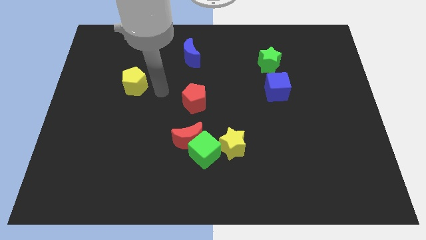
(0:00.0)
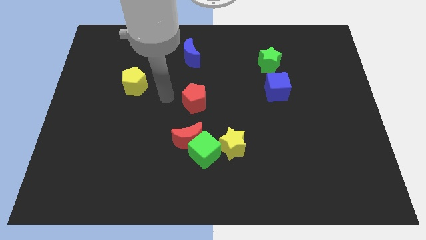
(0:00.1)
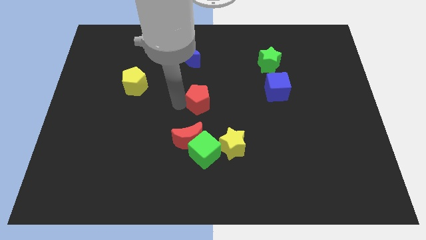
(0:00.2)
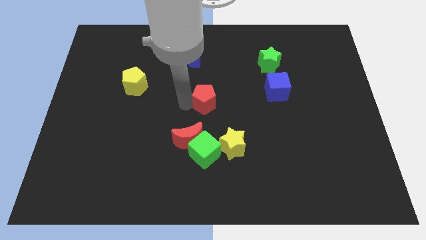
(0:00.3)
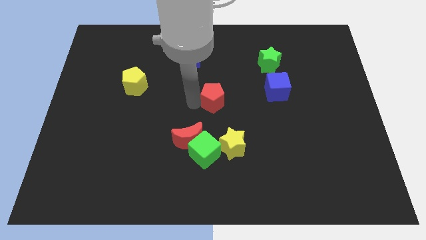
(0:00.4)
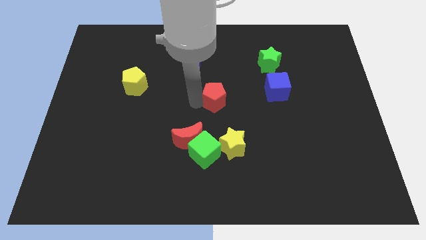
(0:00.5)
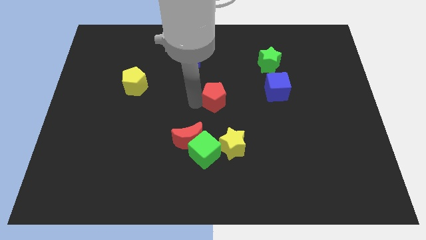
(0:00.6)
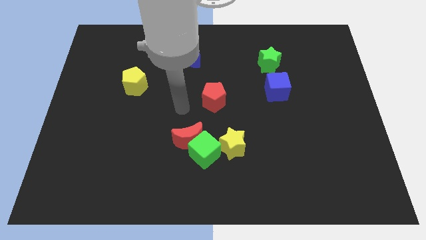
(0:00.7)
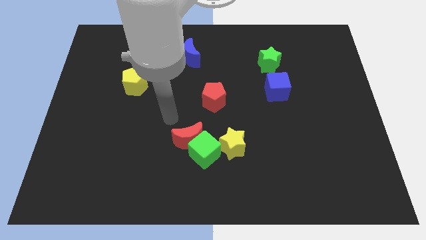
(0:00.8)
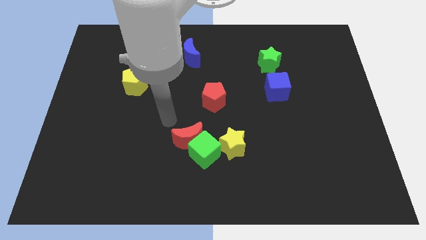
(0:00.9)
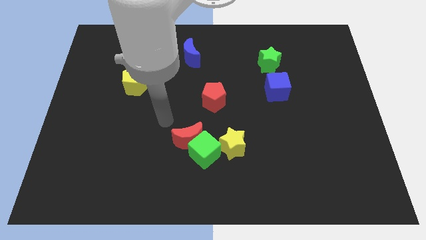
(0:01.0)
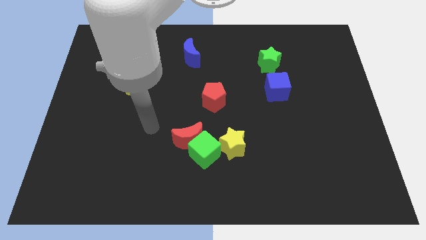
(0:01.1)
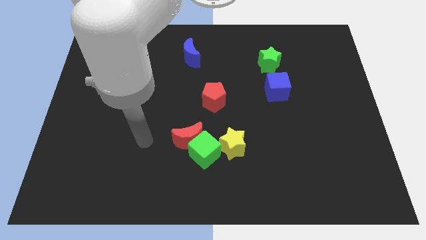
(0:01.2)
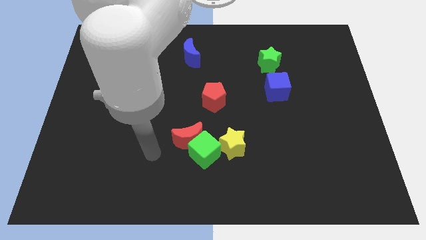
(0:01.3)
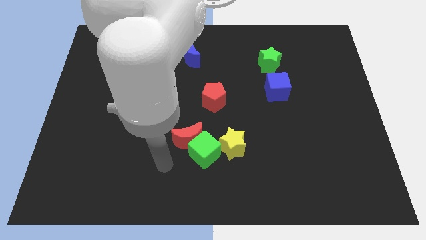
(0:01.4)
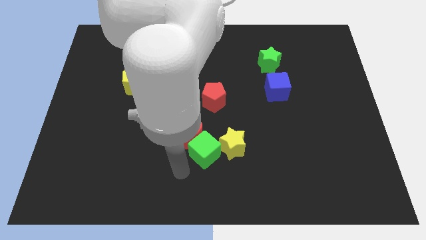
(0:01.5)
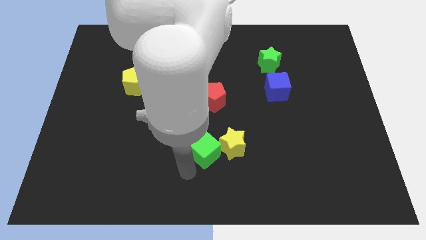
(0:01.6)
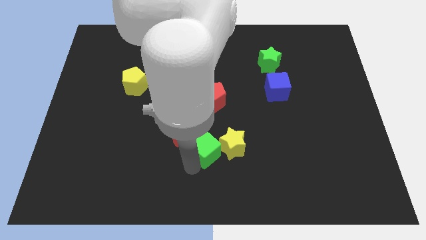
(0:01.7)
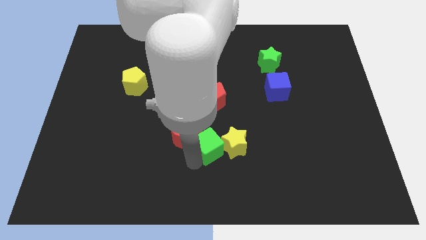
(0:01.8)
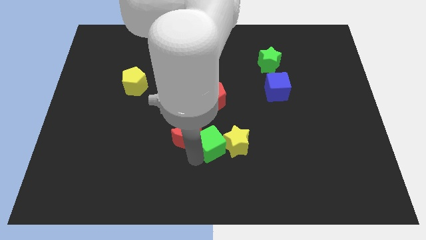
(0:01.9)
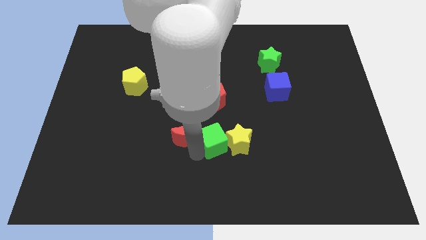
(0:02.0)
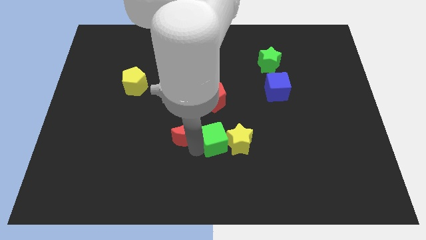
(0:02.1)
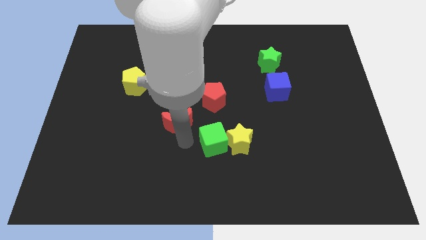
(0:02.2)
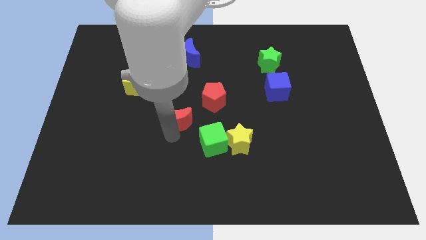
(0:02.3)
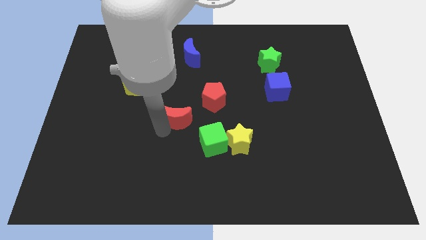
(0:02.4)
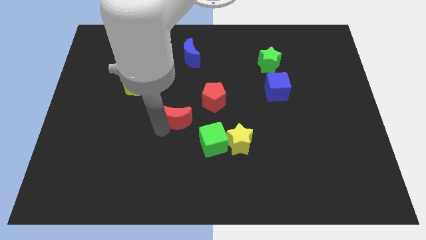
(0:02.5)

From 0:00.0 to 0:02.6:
move the red moon towards the bottom left side of the red pentagon

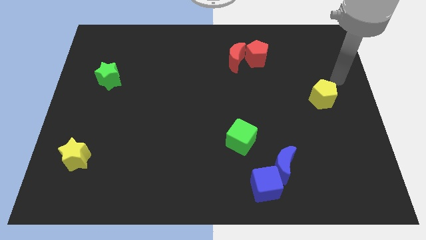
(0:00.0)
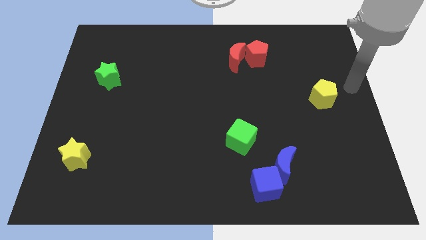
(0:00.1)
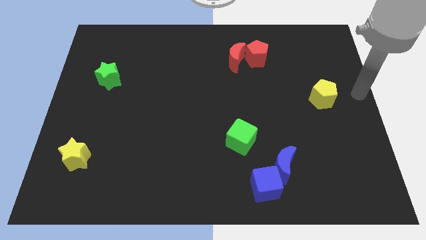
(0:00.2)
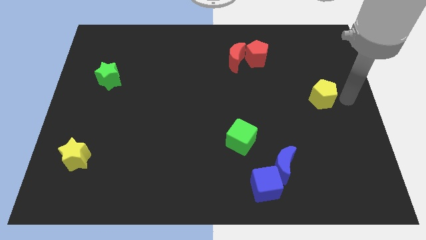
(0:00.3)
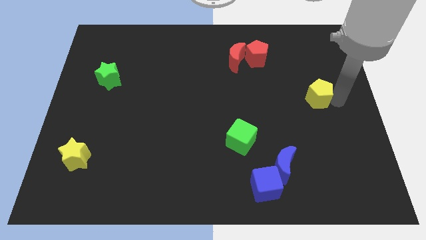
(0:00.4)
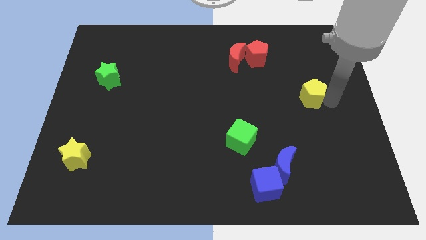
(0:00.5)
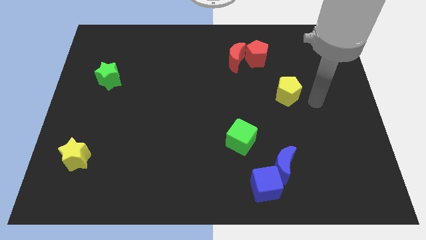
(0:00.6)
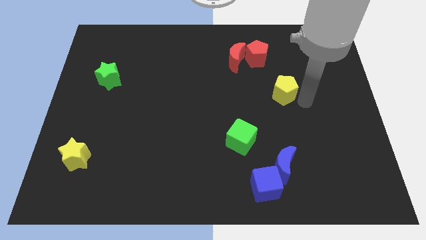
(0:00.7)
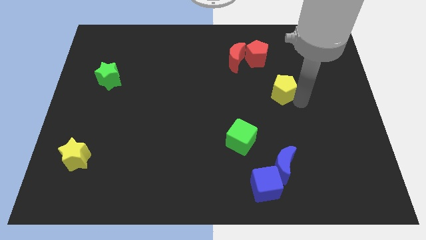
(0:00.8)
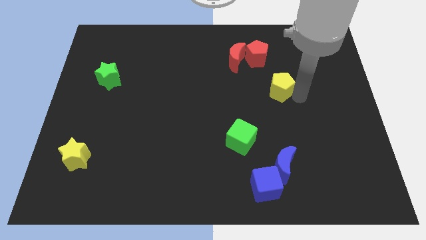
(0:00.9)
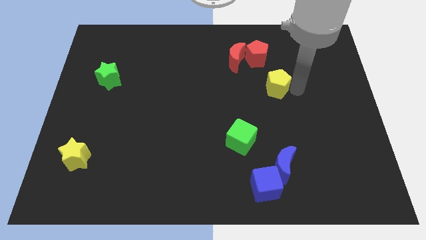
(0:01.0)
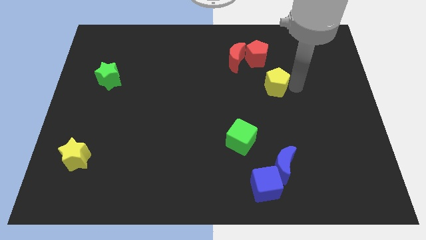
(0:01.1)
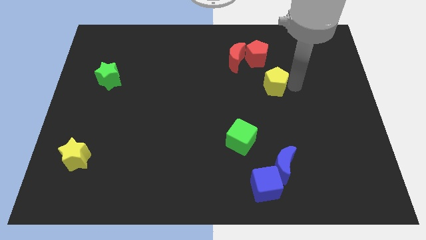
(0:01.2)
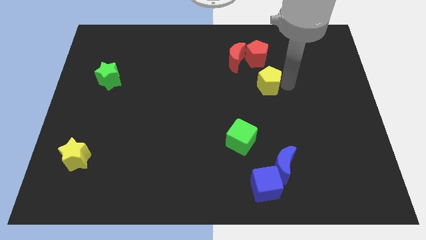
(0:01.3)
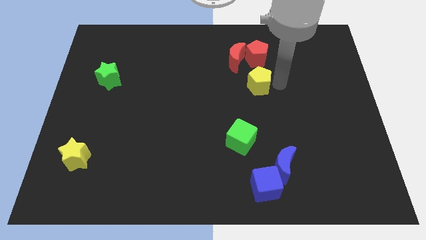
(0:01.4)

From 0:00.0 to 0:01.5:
put the yellow pentagon below the red pentagon

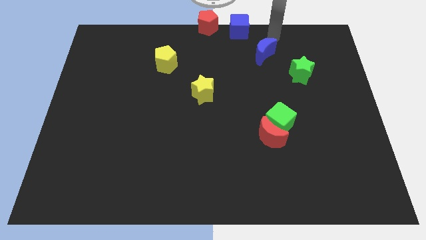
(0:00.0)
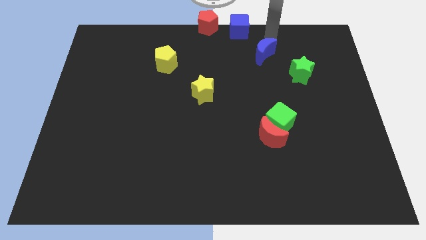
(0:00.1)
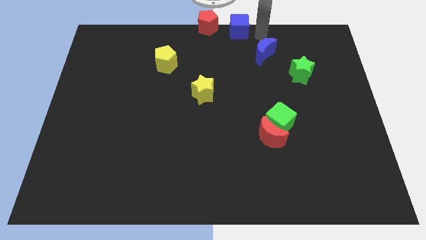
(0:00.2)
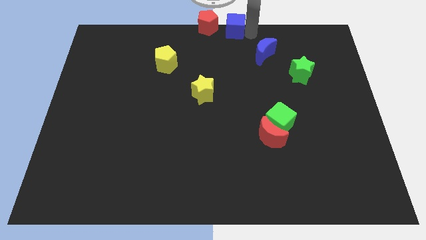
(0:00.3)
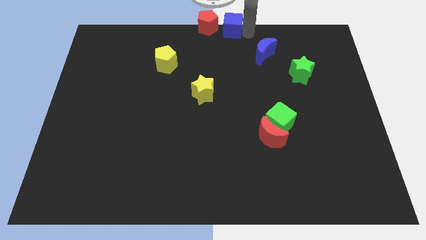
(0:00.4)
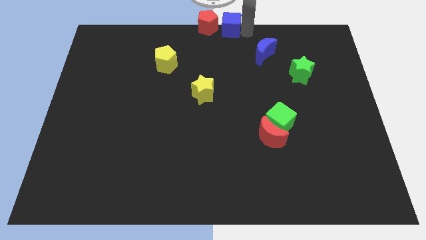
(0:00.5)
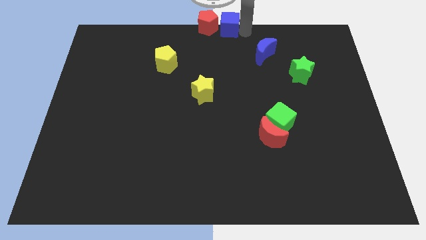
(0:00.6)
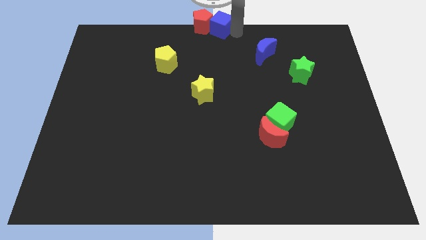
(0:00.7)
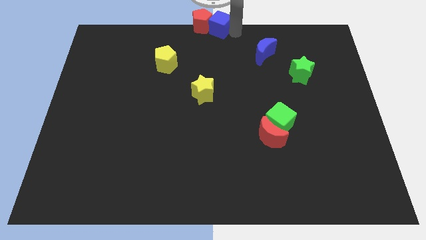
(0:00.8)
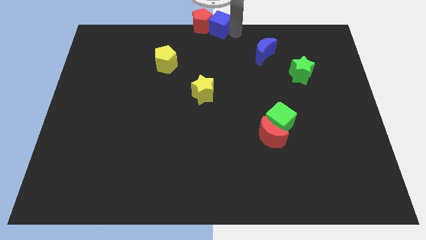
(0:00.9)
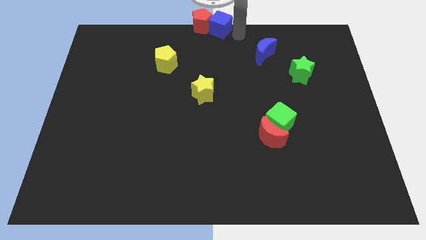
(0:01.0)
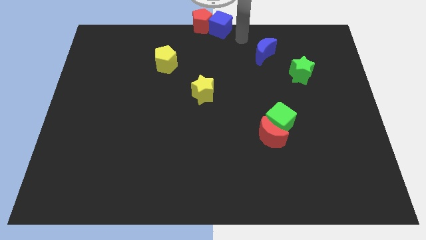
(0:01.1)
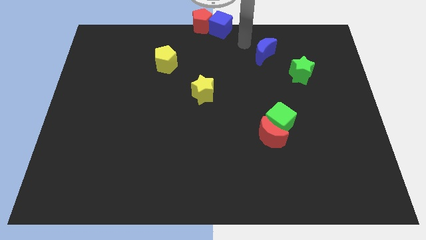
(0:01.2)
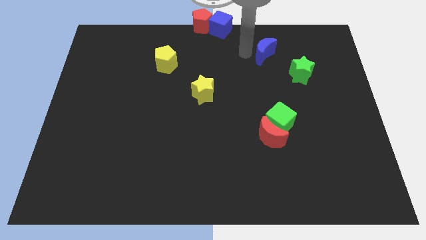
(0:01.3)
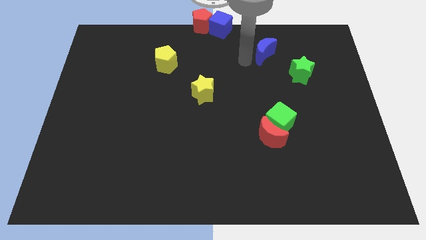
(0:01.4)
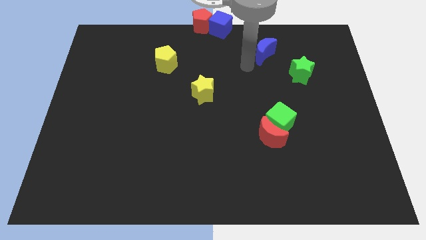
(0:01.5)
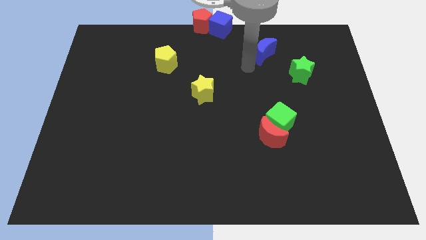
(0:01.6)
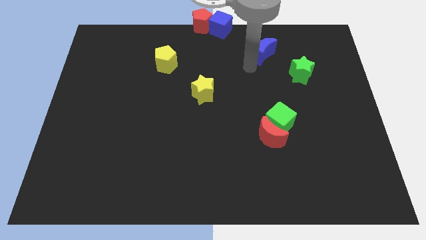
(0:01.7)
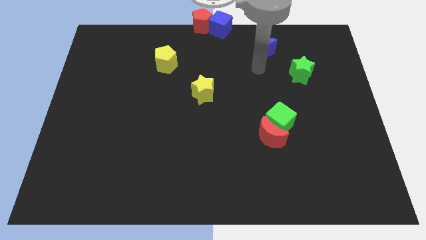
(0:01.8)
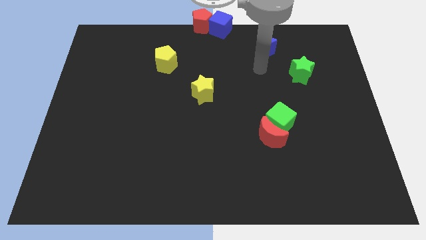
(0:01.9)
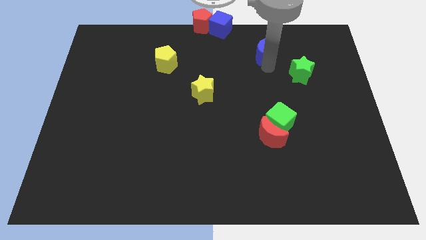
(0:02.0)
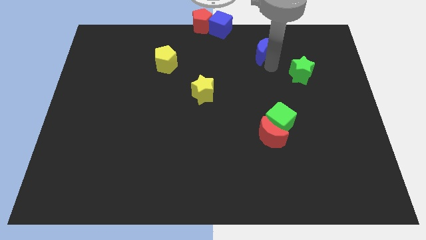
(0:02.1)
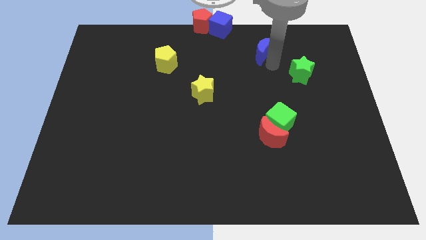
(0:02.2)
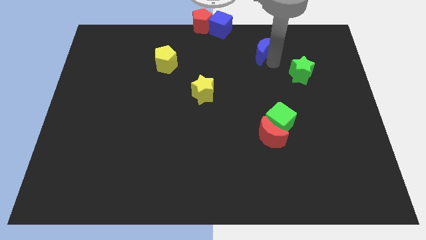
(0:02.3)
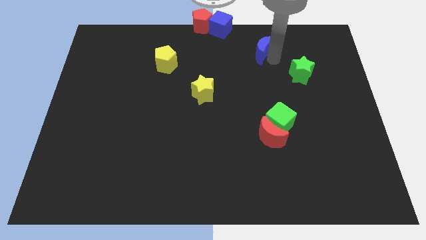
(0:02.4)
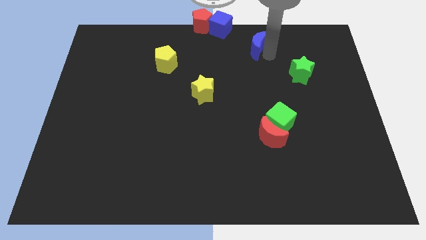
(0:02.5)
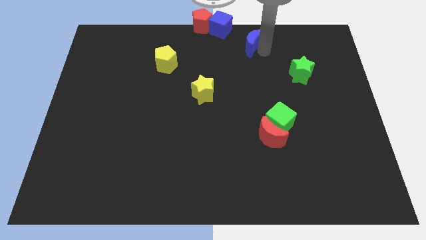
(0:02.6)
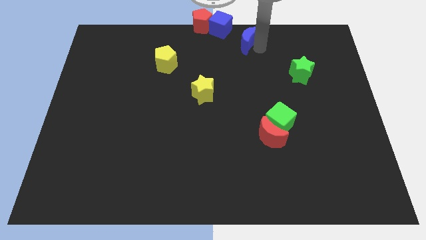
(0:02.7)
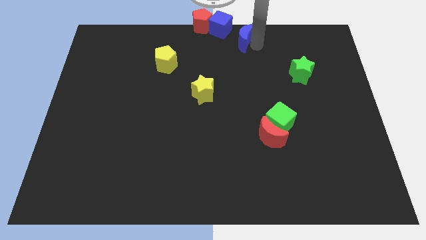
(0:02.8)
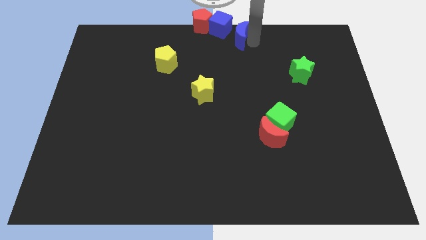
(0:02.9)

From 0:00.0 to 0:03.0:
move the blue moon towards the blue cube

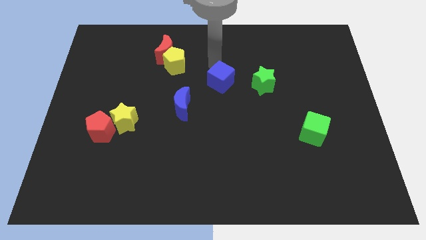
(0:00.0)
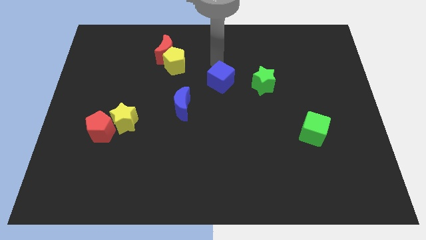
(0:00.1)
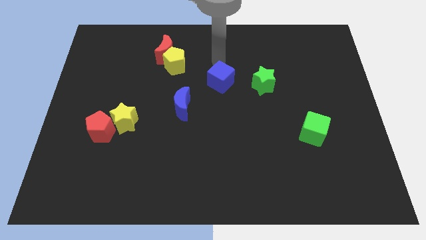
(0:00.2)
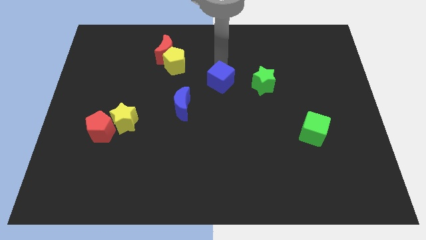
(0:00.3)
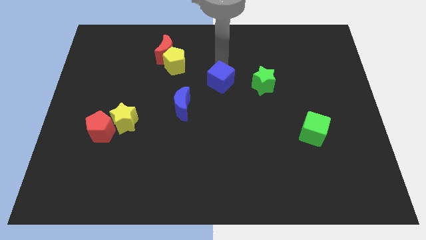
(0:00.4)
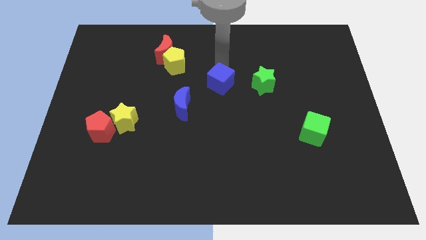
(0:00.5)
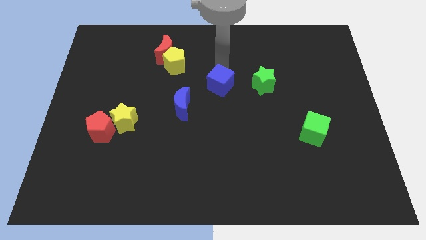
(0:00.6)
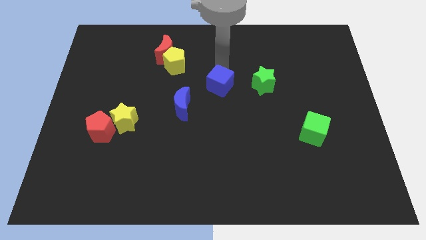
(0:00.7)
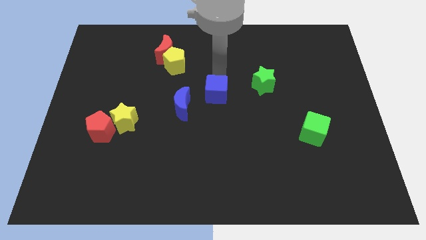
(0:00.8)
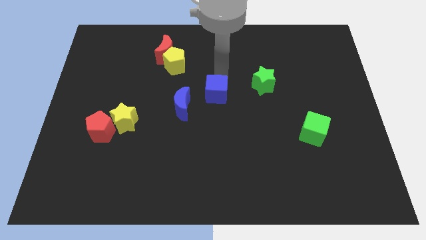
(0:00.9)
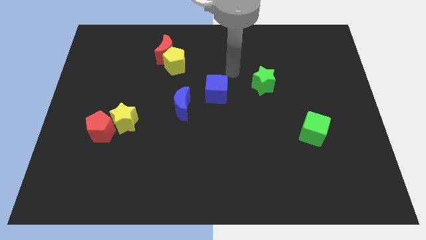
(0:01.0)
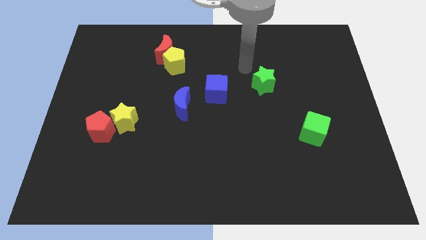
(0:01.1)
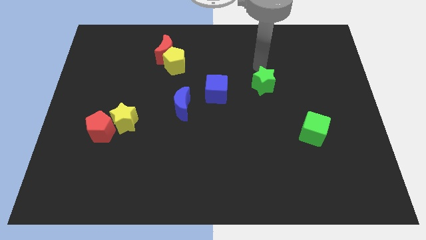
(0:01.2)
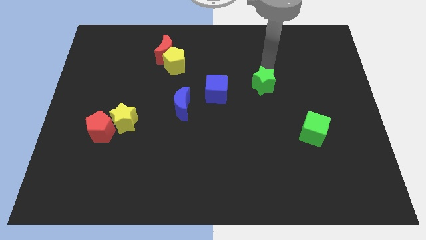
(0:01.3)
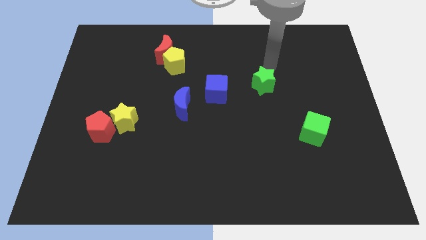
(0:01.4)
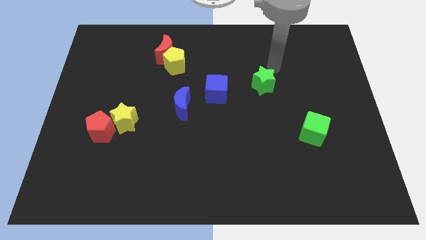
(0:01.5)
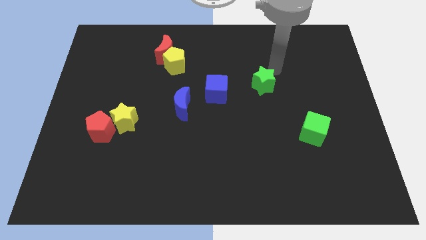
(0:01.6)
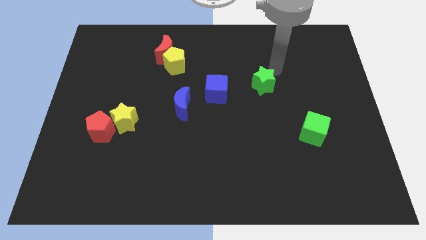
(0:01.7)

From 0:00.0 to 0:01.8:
move the blue cube towards the center of the board

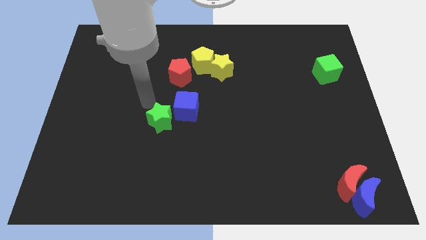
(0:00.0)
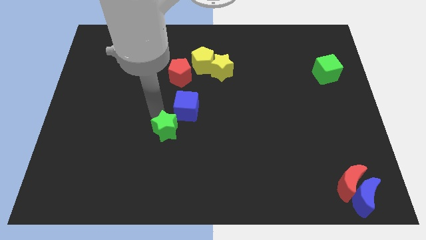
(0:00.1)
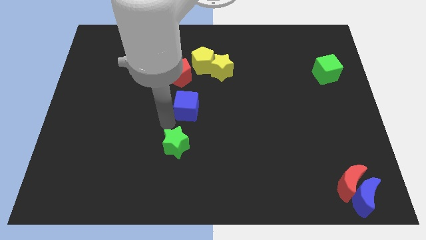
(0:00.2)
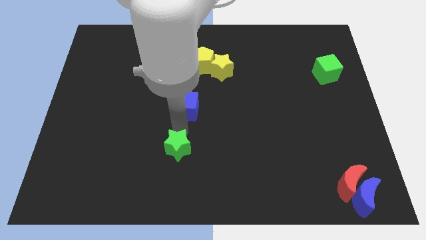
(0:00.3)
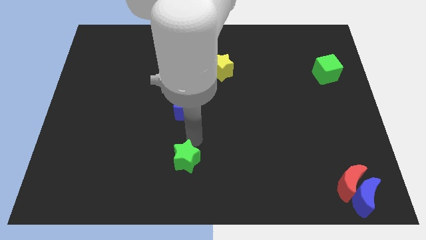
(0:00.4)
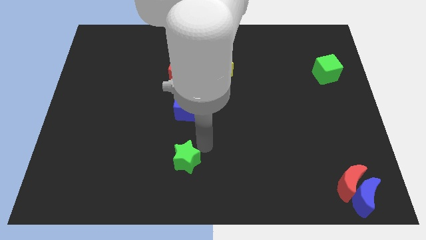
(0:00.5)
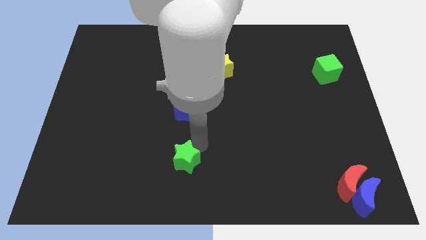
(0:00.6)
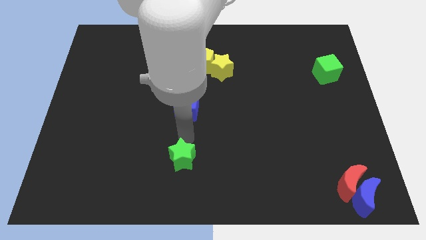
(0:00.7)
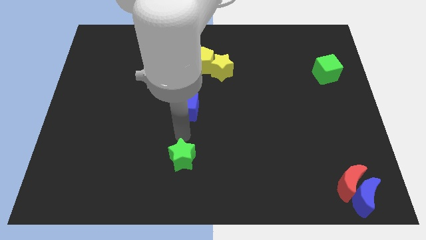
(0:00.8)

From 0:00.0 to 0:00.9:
place the green star vertically below the blue cube
